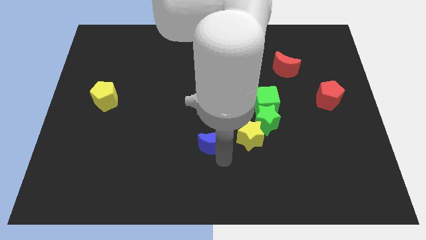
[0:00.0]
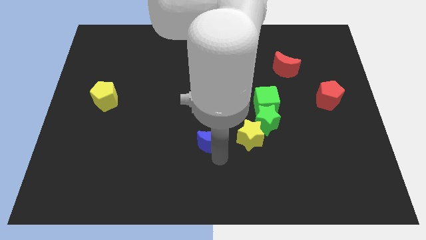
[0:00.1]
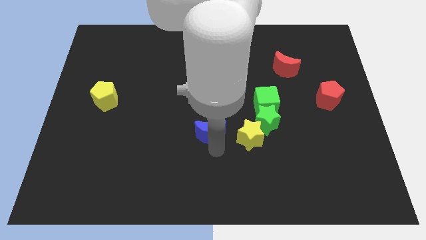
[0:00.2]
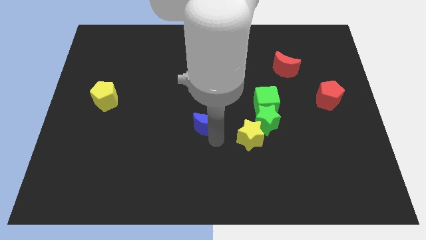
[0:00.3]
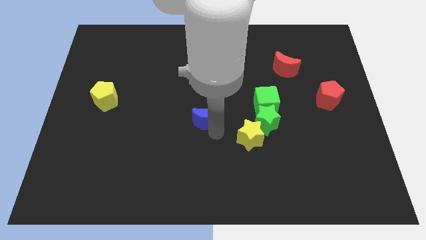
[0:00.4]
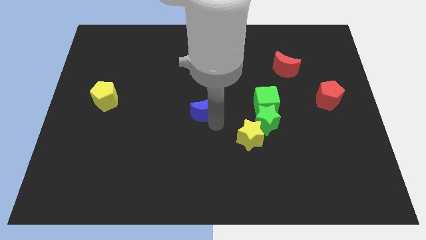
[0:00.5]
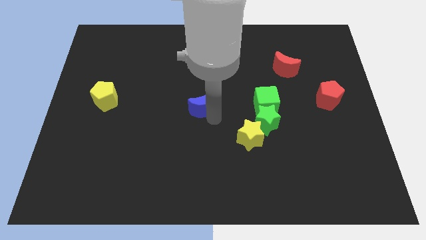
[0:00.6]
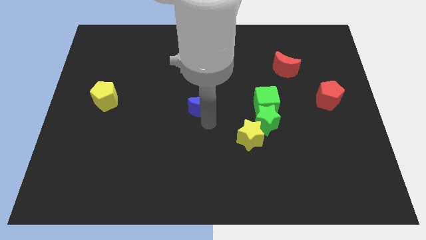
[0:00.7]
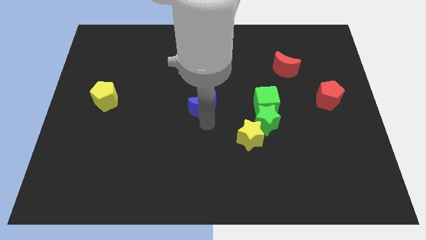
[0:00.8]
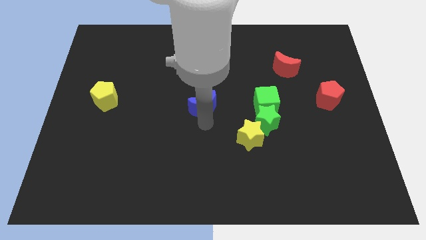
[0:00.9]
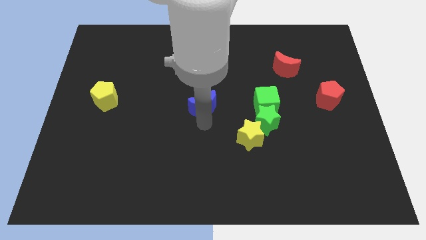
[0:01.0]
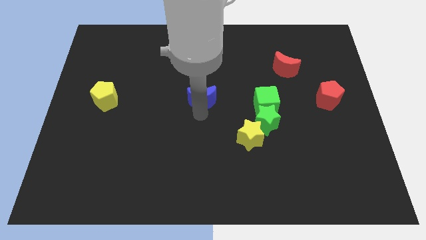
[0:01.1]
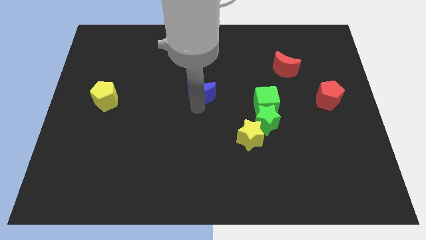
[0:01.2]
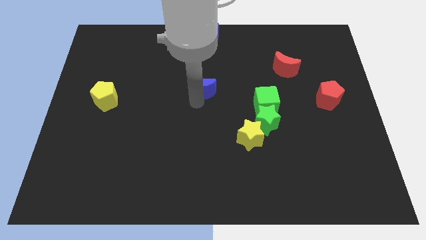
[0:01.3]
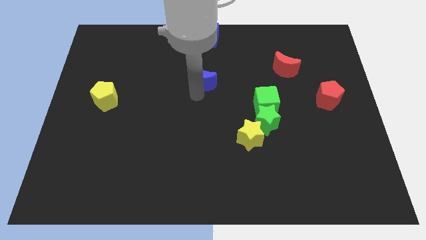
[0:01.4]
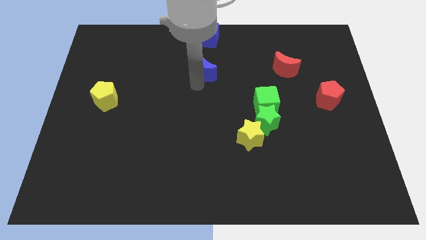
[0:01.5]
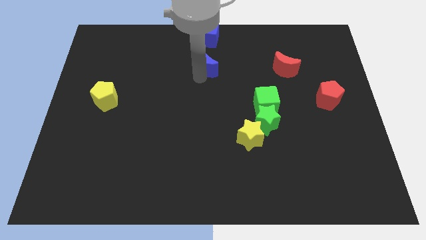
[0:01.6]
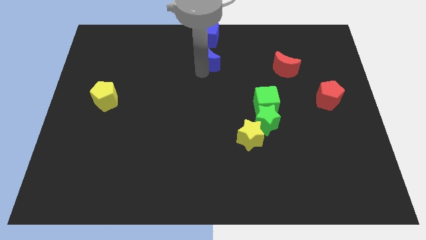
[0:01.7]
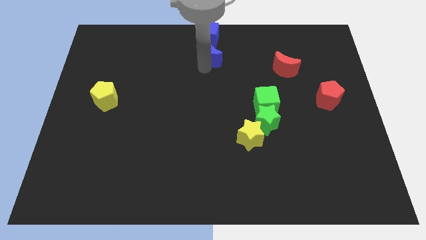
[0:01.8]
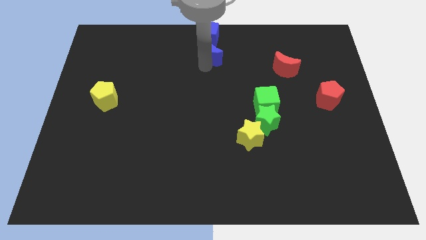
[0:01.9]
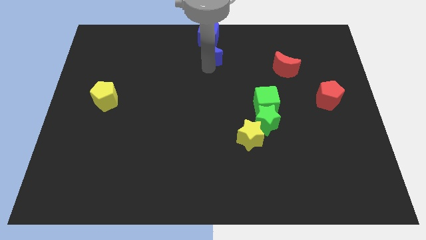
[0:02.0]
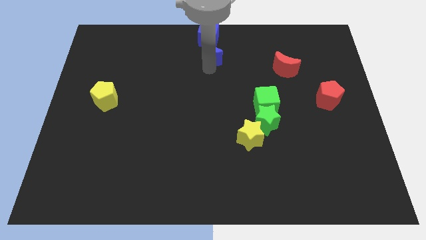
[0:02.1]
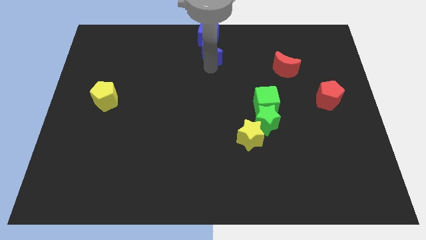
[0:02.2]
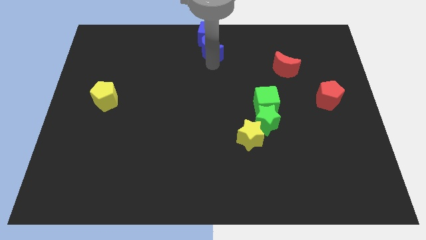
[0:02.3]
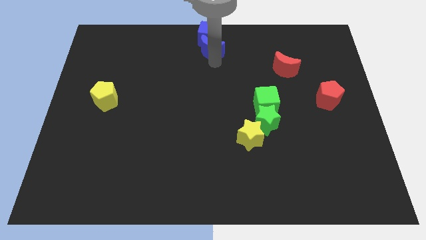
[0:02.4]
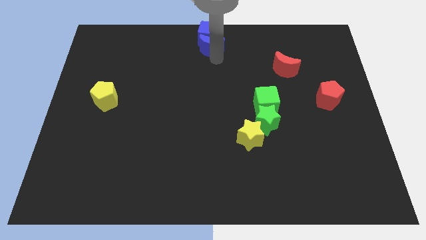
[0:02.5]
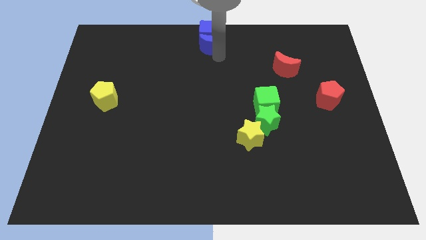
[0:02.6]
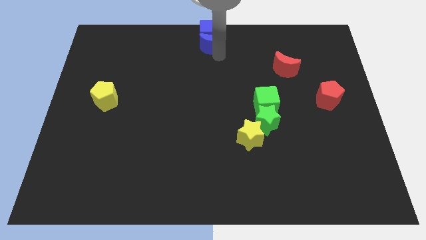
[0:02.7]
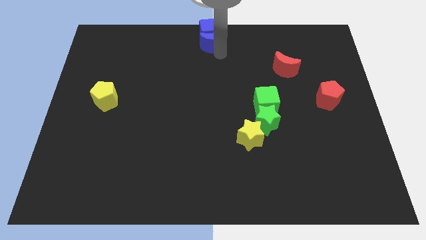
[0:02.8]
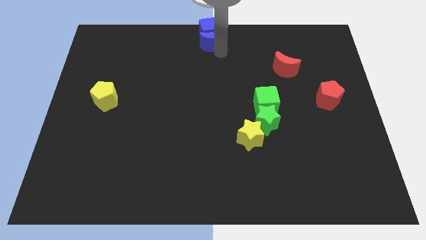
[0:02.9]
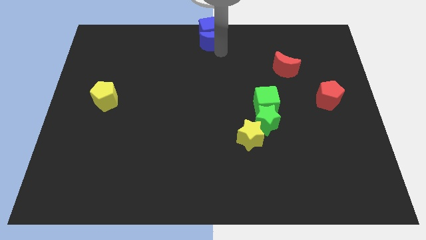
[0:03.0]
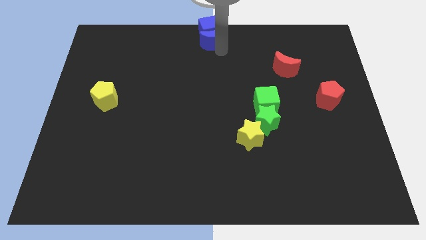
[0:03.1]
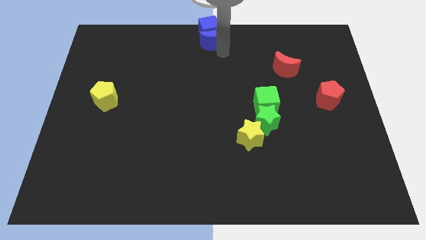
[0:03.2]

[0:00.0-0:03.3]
place the blue moon into the blue cube at the top center

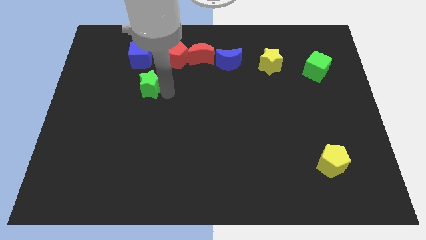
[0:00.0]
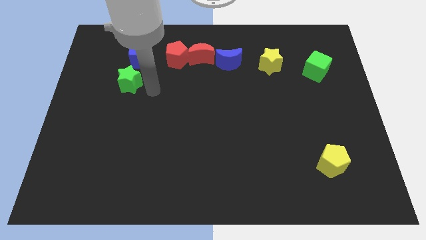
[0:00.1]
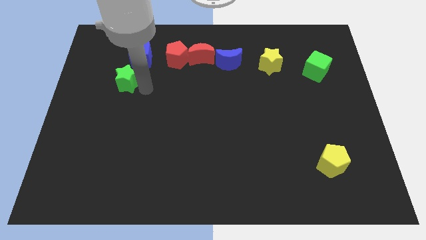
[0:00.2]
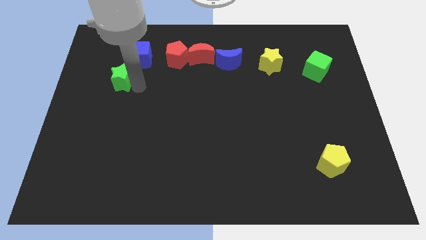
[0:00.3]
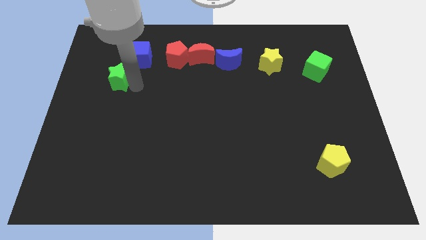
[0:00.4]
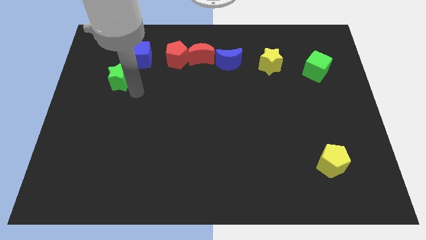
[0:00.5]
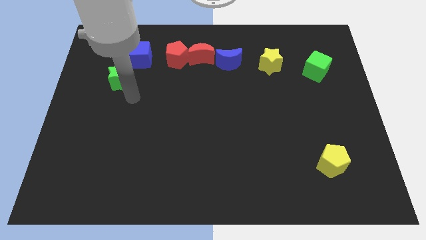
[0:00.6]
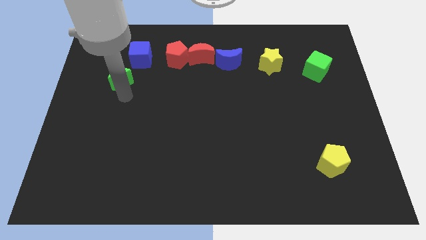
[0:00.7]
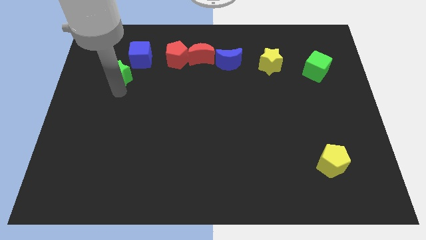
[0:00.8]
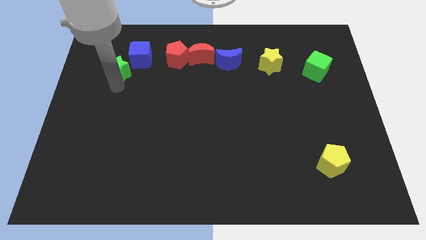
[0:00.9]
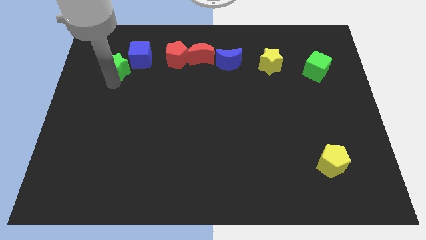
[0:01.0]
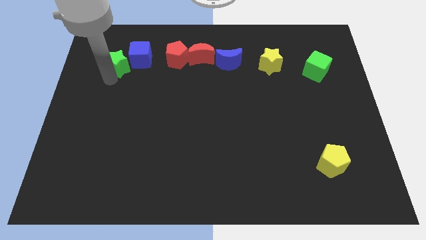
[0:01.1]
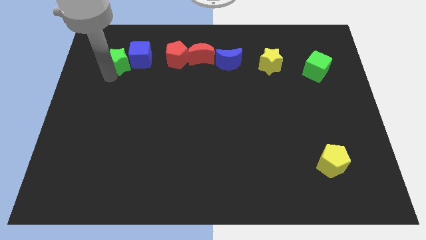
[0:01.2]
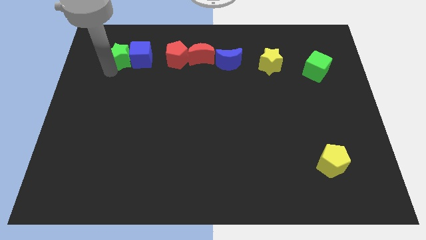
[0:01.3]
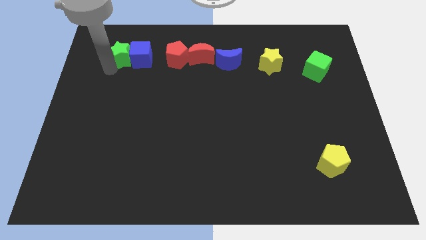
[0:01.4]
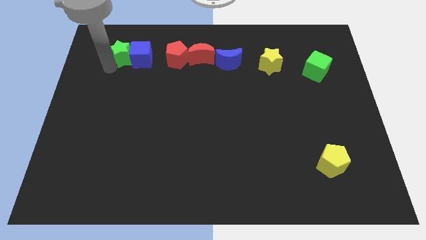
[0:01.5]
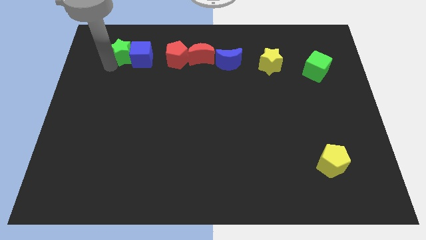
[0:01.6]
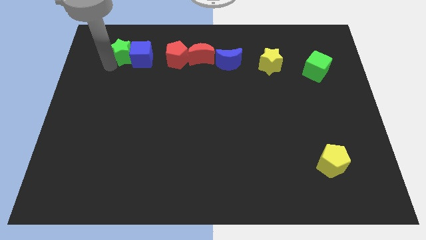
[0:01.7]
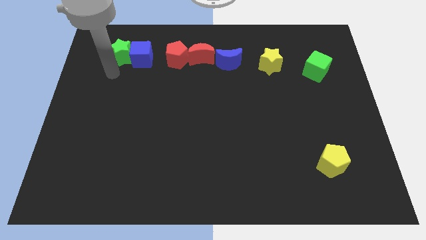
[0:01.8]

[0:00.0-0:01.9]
place the green star left to blue cube

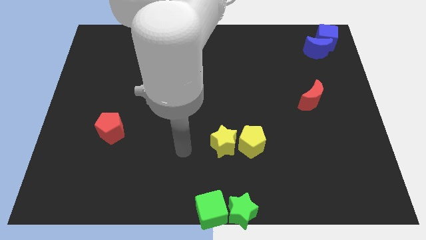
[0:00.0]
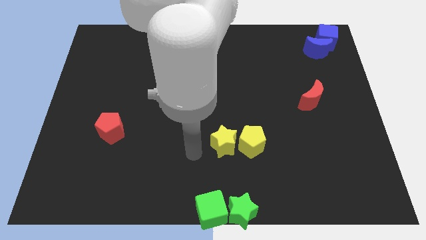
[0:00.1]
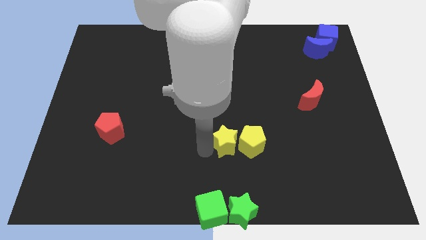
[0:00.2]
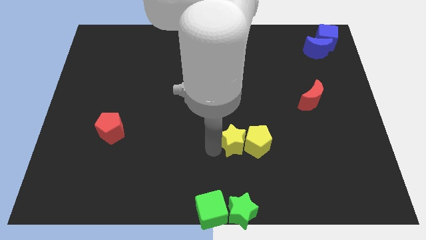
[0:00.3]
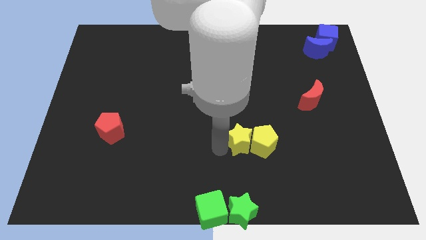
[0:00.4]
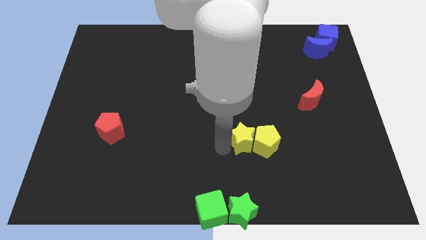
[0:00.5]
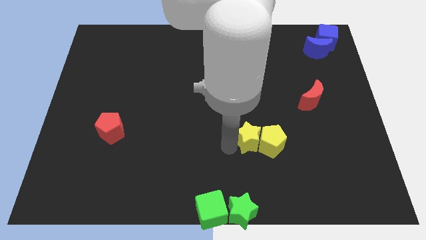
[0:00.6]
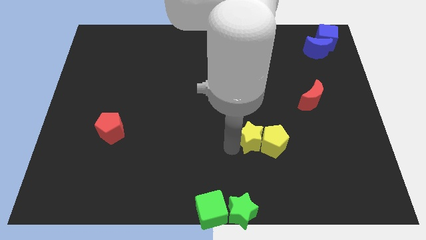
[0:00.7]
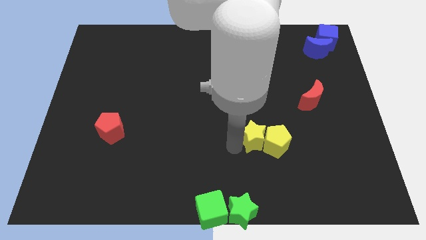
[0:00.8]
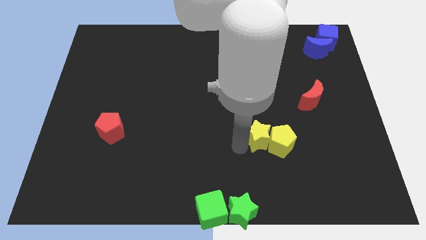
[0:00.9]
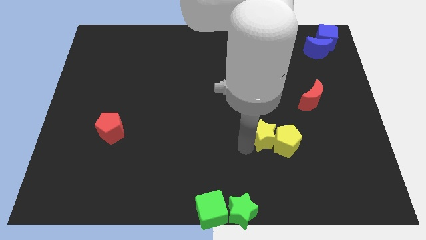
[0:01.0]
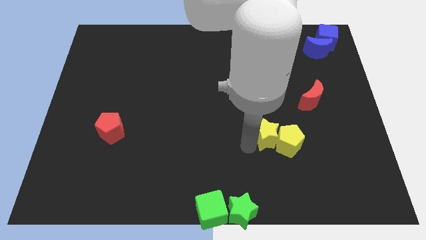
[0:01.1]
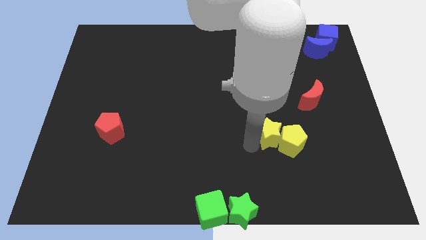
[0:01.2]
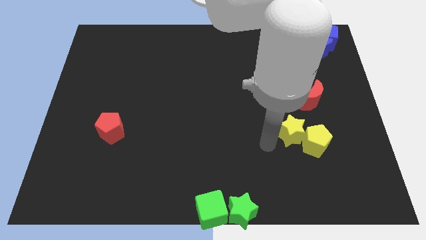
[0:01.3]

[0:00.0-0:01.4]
push the yellow blocks towards right side

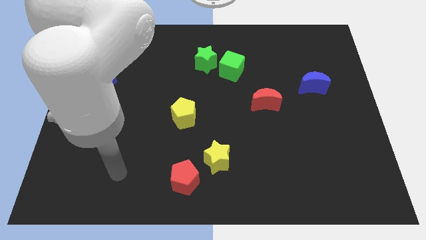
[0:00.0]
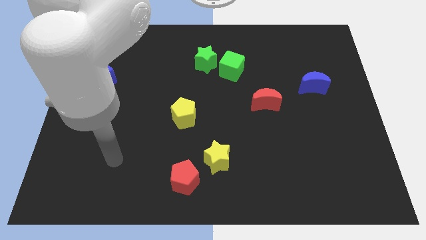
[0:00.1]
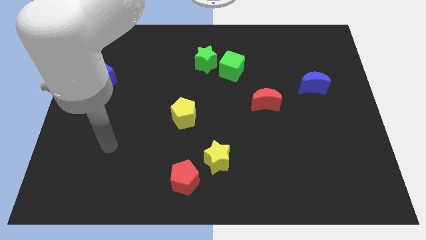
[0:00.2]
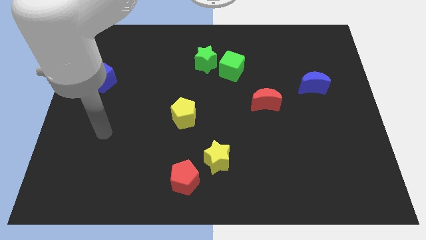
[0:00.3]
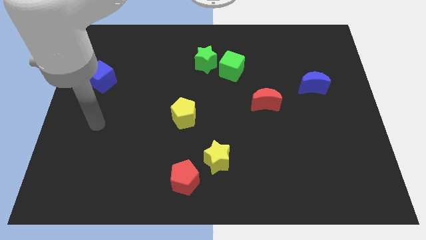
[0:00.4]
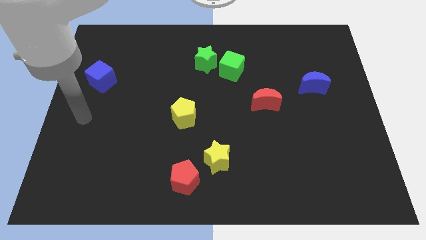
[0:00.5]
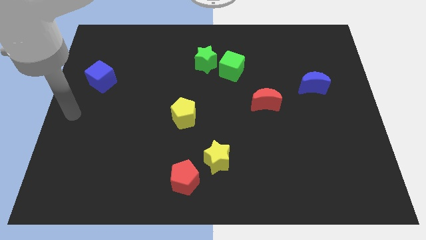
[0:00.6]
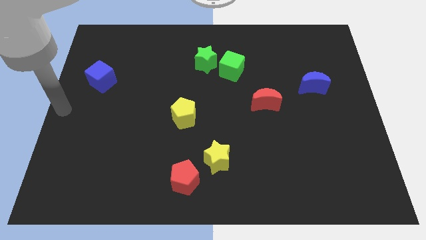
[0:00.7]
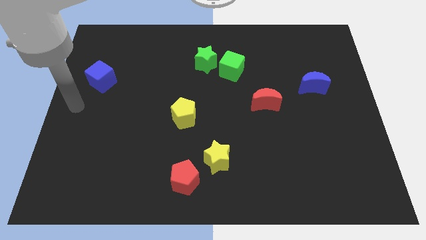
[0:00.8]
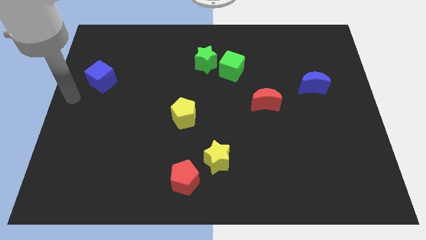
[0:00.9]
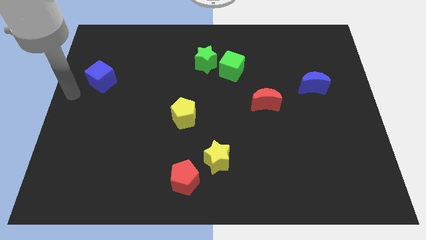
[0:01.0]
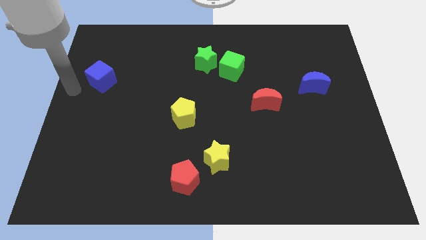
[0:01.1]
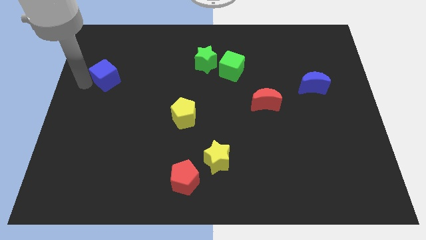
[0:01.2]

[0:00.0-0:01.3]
move your arm to the left of blue cube

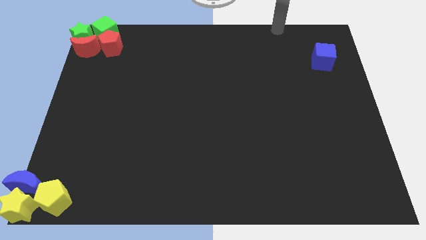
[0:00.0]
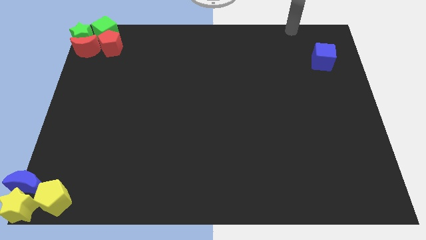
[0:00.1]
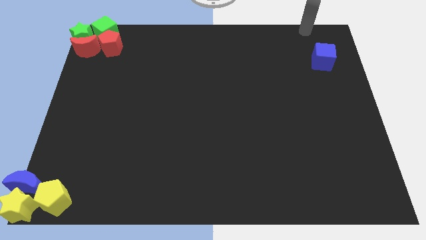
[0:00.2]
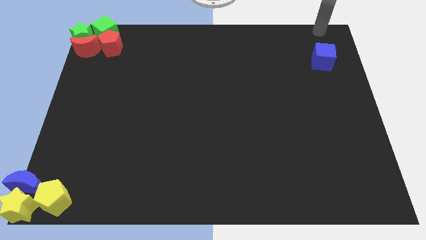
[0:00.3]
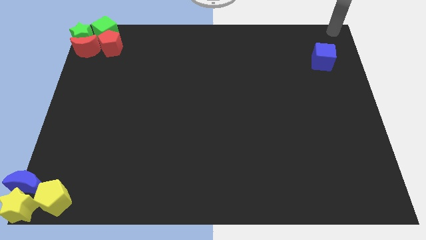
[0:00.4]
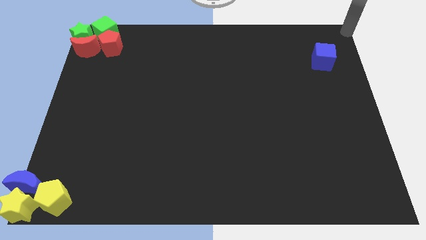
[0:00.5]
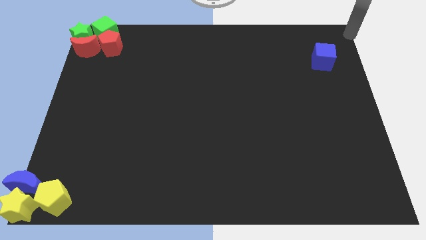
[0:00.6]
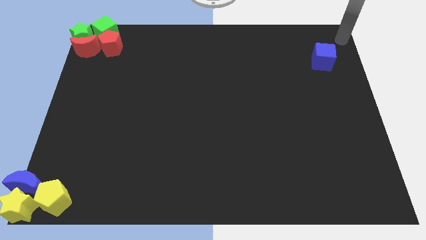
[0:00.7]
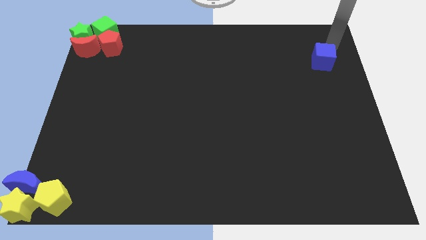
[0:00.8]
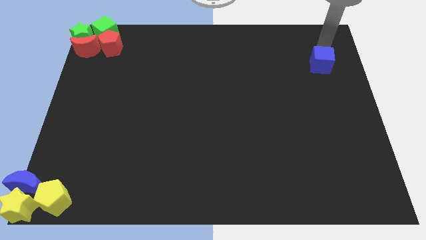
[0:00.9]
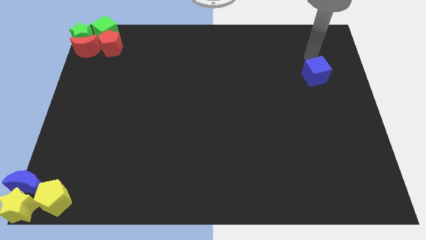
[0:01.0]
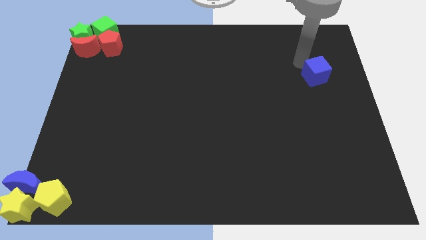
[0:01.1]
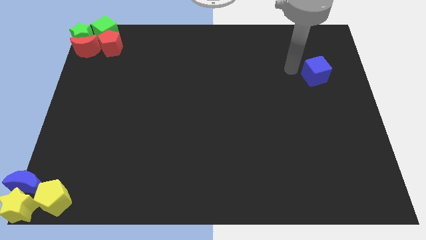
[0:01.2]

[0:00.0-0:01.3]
slightly push the blue cube towards down
